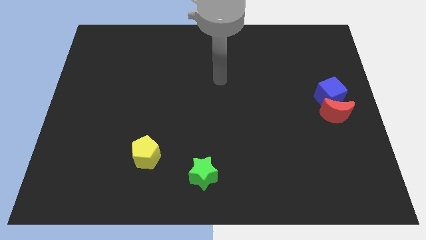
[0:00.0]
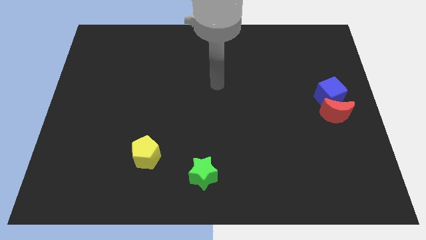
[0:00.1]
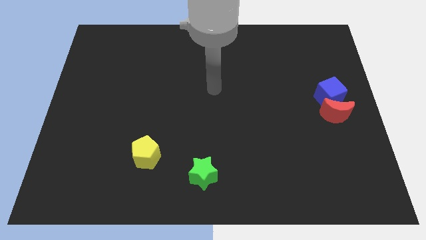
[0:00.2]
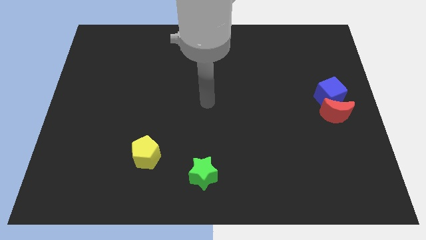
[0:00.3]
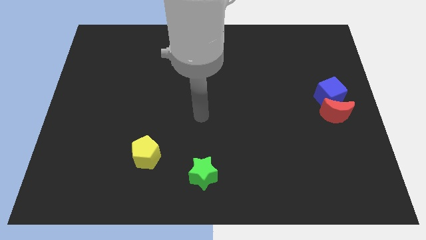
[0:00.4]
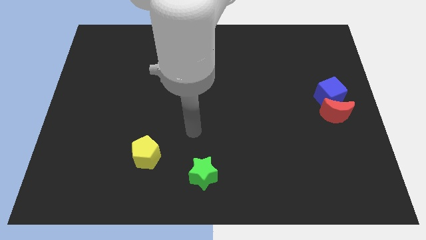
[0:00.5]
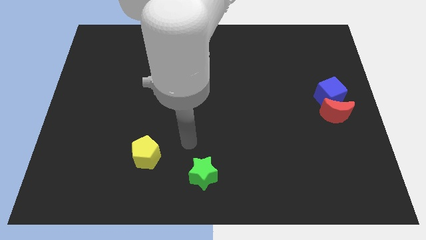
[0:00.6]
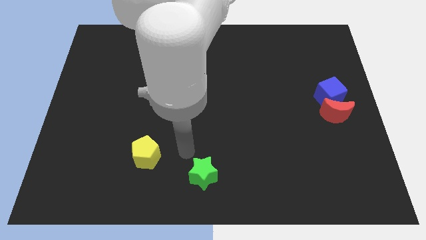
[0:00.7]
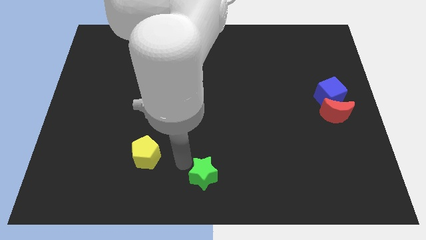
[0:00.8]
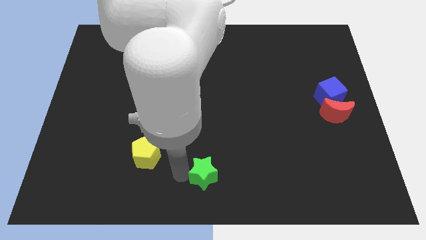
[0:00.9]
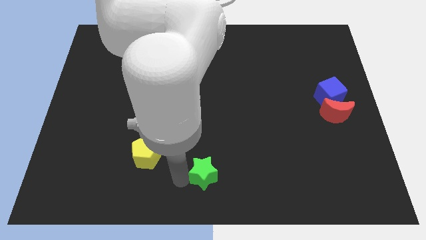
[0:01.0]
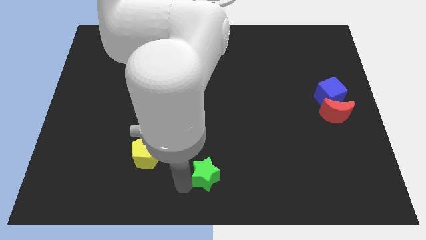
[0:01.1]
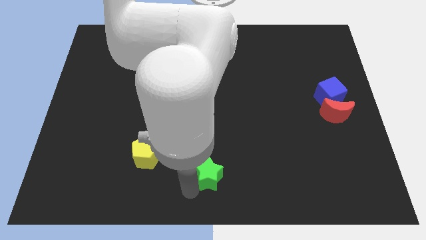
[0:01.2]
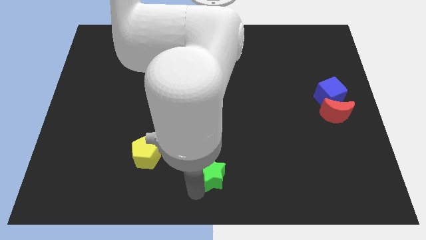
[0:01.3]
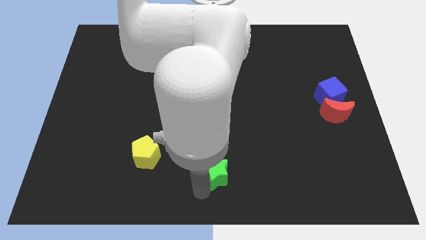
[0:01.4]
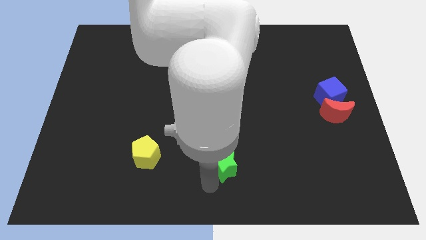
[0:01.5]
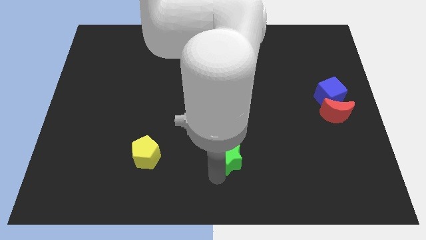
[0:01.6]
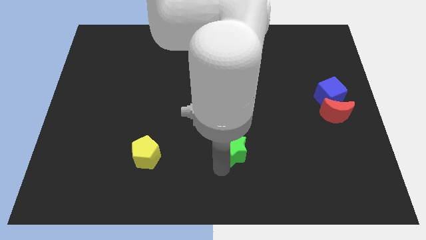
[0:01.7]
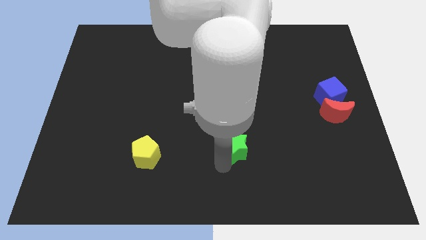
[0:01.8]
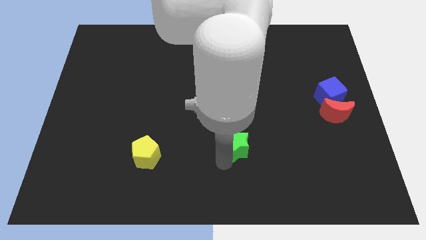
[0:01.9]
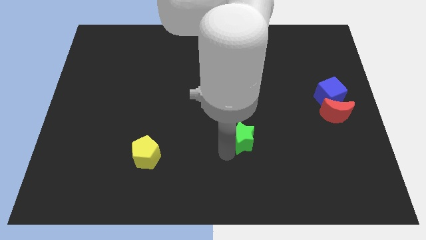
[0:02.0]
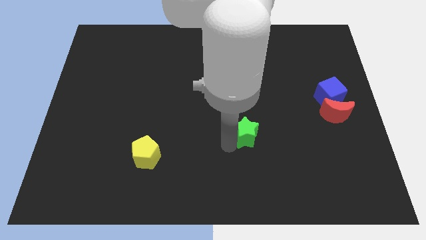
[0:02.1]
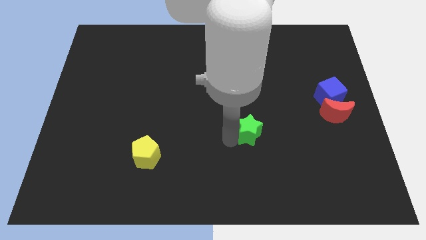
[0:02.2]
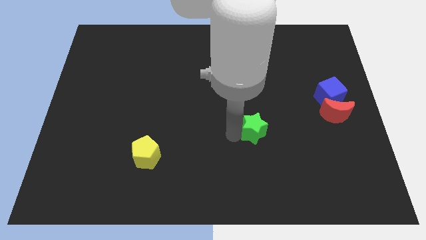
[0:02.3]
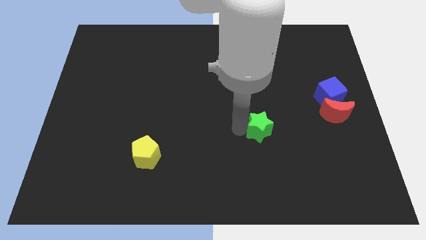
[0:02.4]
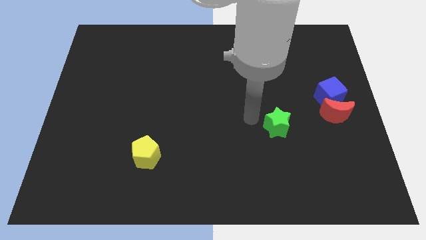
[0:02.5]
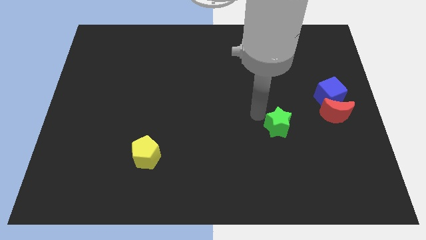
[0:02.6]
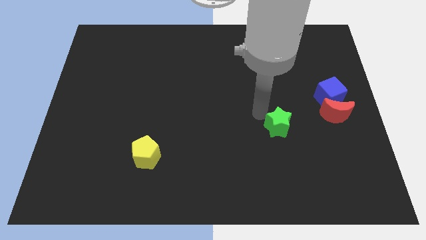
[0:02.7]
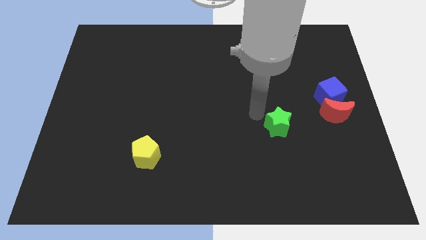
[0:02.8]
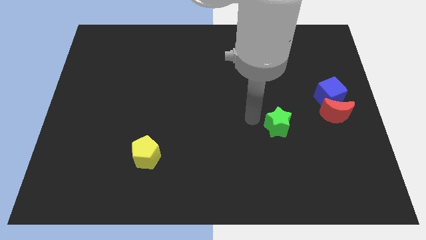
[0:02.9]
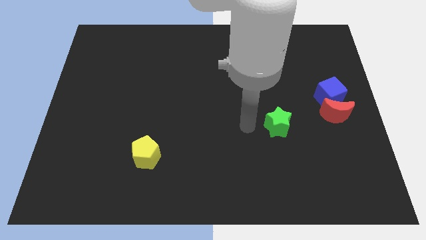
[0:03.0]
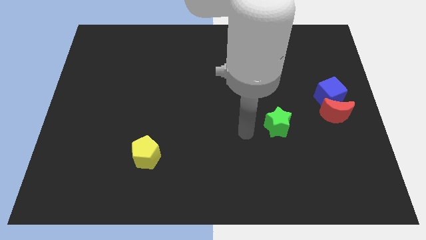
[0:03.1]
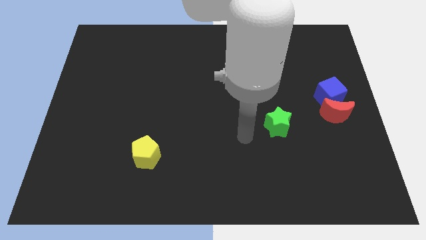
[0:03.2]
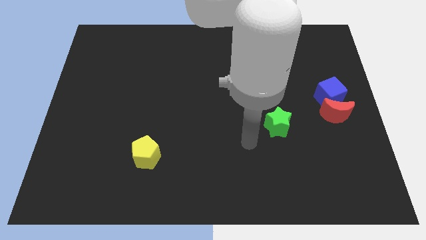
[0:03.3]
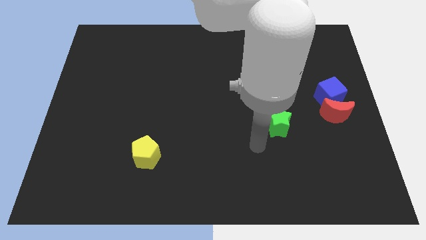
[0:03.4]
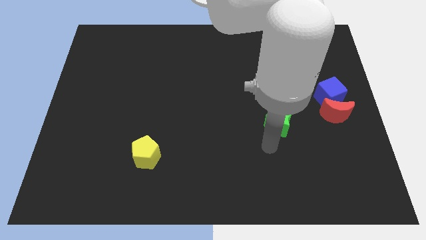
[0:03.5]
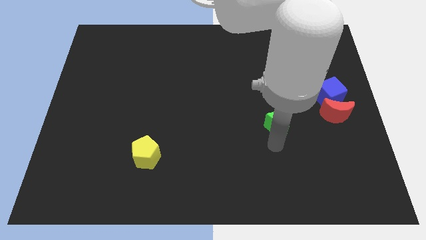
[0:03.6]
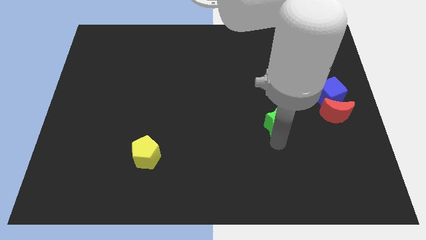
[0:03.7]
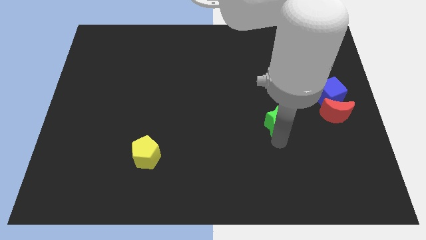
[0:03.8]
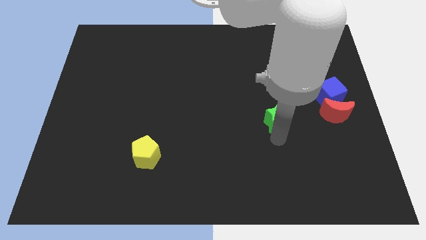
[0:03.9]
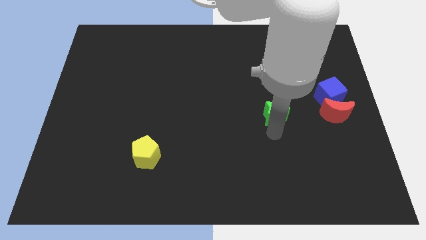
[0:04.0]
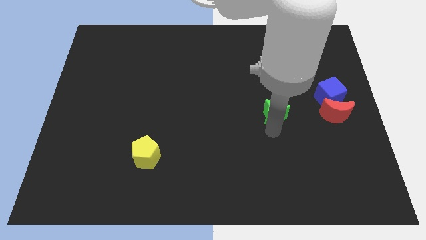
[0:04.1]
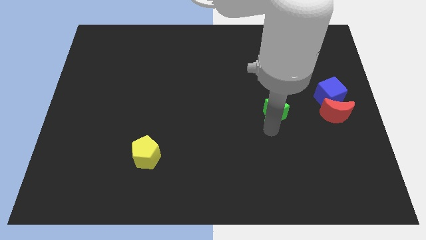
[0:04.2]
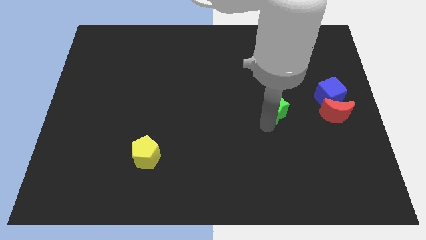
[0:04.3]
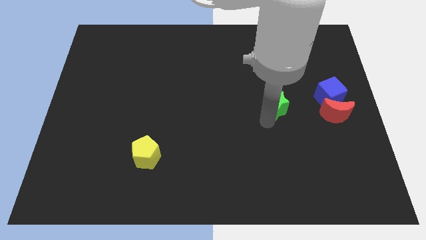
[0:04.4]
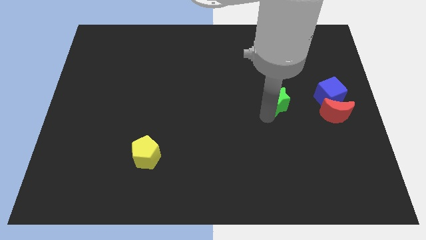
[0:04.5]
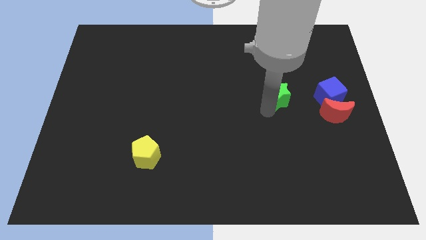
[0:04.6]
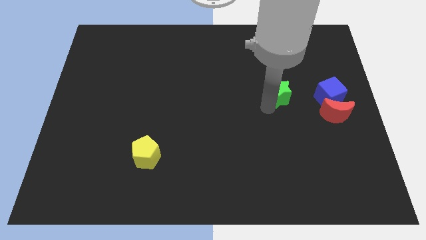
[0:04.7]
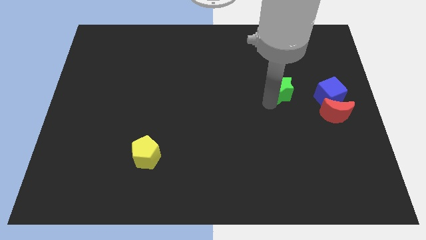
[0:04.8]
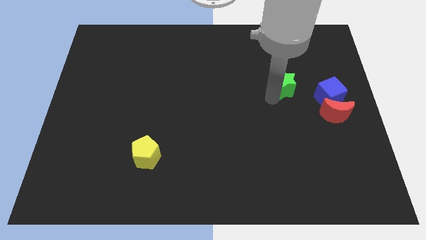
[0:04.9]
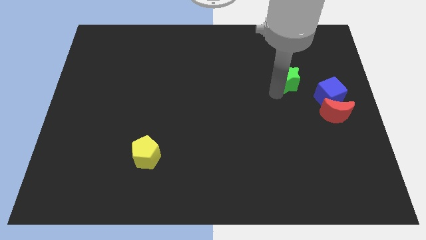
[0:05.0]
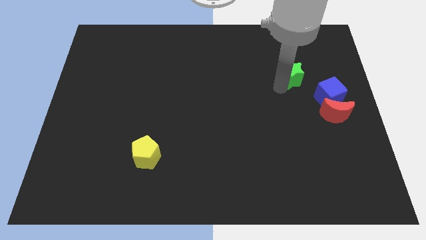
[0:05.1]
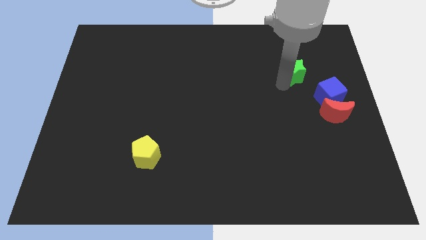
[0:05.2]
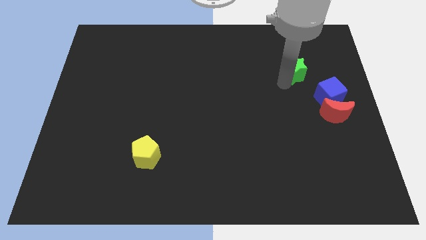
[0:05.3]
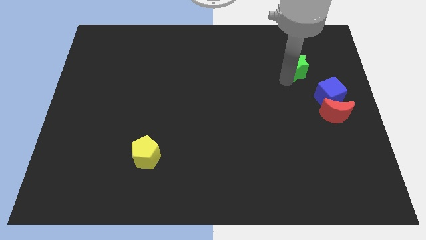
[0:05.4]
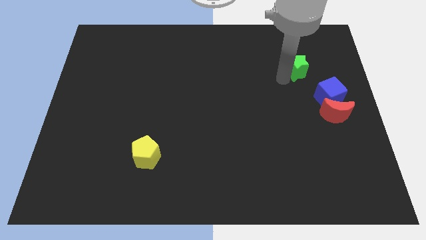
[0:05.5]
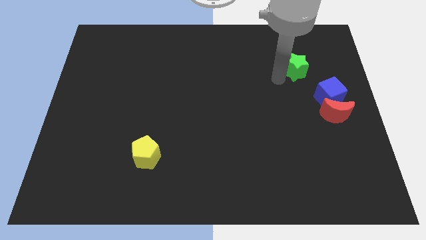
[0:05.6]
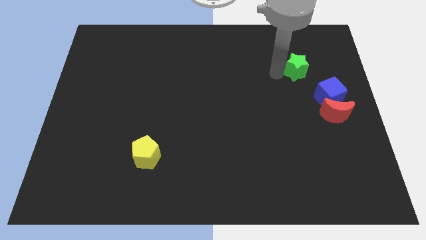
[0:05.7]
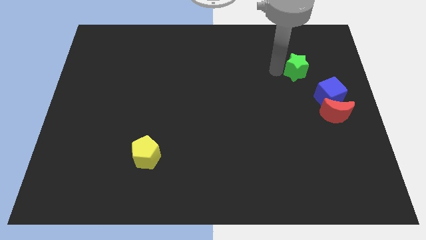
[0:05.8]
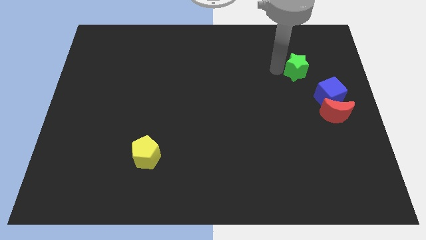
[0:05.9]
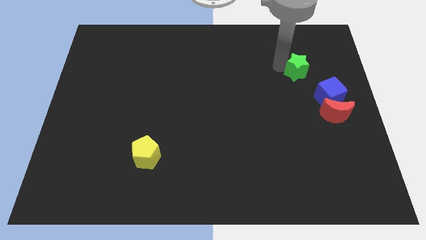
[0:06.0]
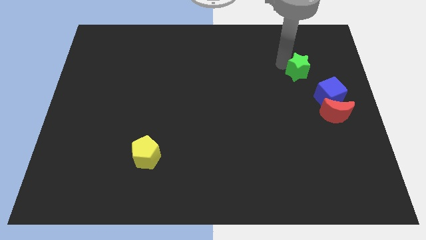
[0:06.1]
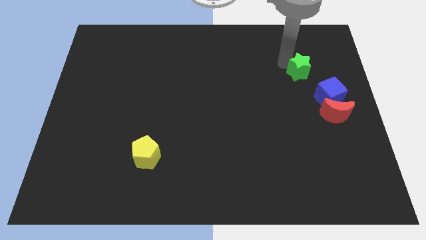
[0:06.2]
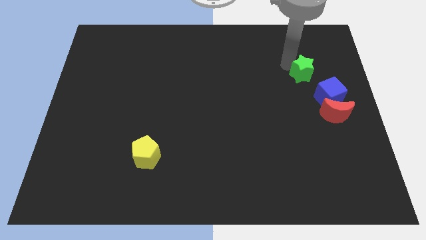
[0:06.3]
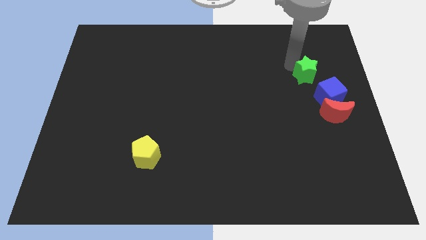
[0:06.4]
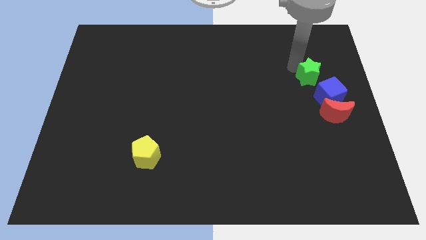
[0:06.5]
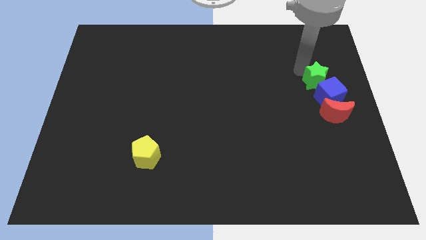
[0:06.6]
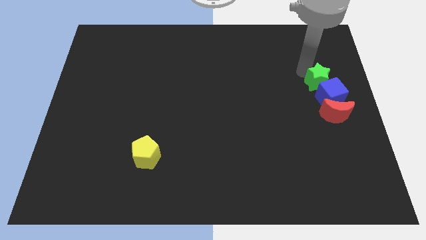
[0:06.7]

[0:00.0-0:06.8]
slide the green star towards the blue cube

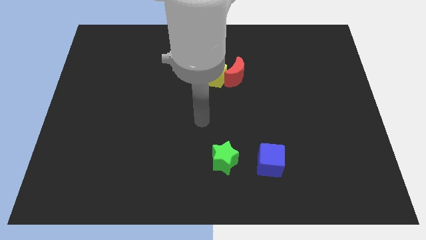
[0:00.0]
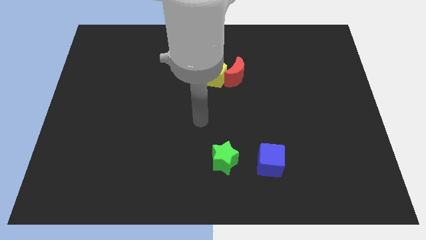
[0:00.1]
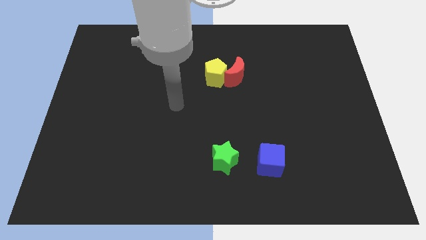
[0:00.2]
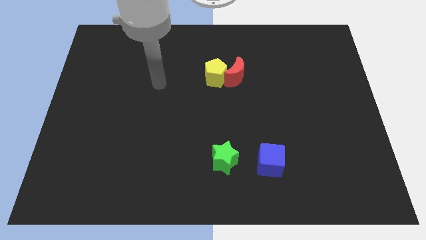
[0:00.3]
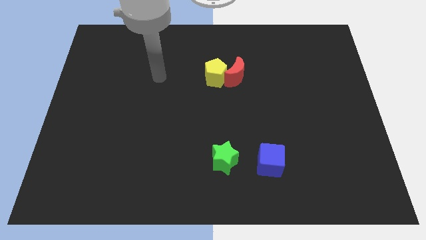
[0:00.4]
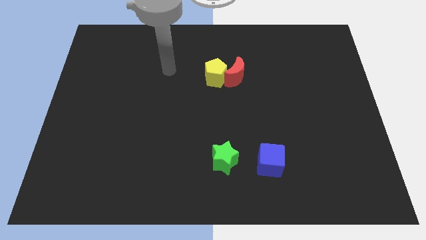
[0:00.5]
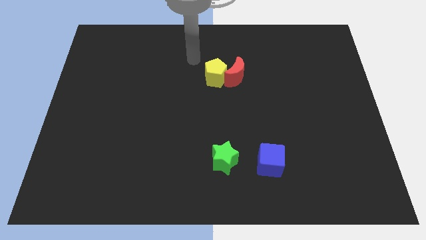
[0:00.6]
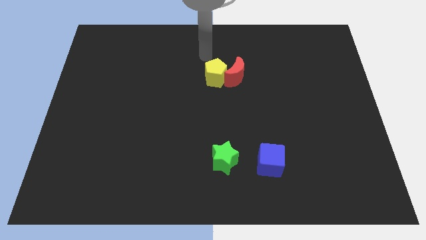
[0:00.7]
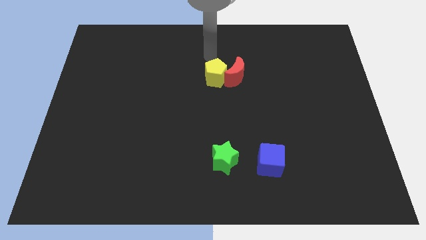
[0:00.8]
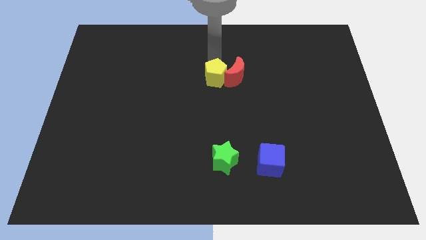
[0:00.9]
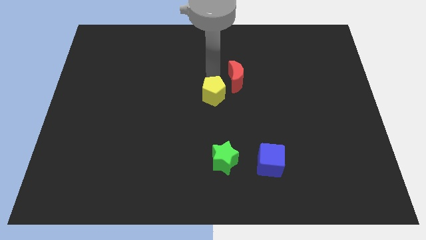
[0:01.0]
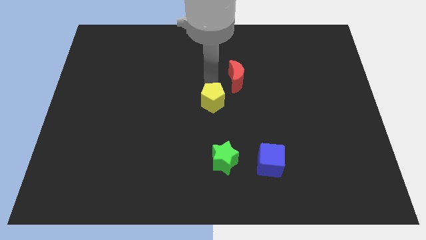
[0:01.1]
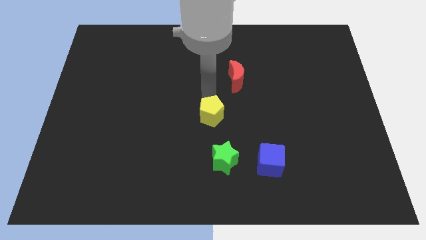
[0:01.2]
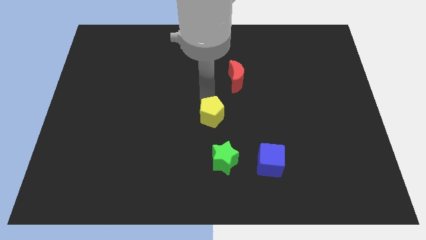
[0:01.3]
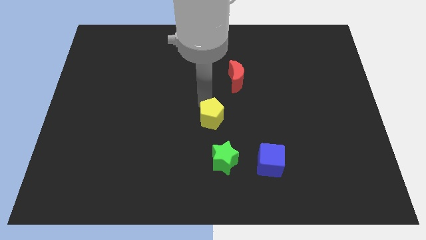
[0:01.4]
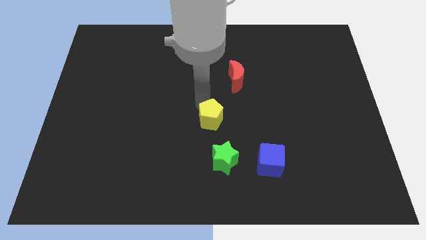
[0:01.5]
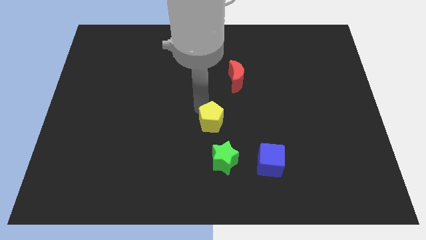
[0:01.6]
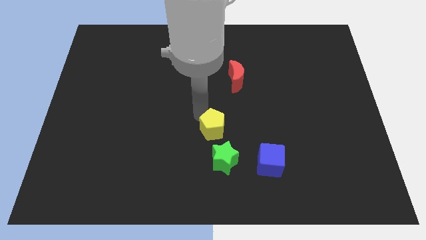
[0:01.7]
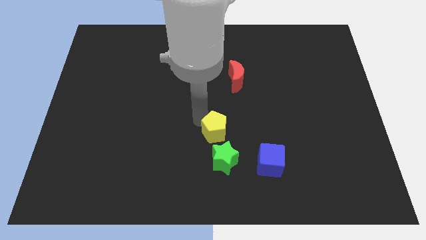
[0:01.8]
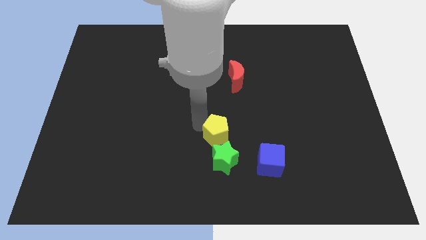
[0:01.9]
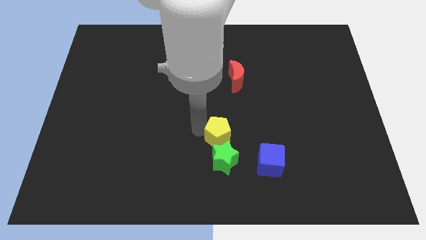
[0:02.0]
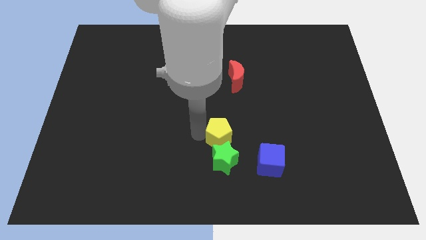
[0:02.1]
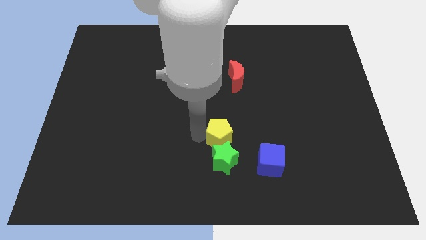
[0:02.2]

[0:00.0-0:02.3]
push the yellow block to the star
